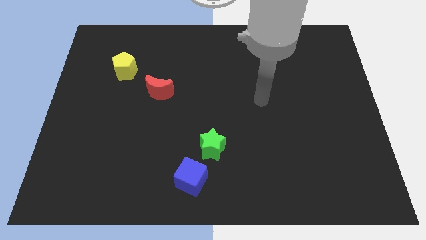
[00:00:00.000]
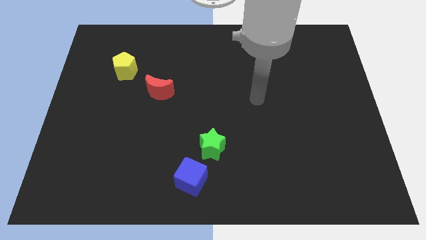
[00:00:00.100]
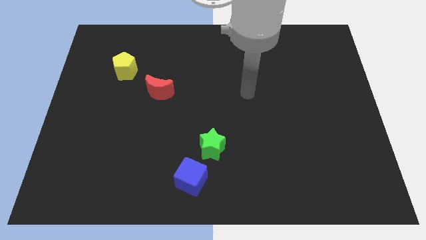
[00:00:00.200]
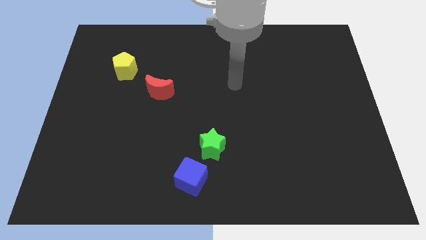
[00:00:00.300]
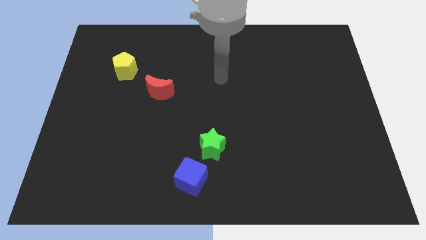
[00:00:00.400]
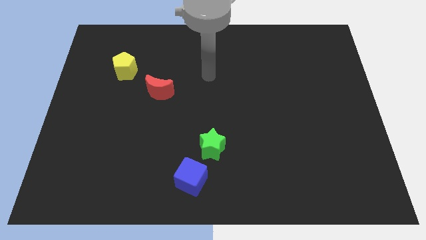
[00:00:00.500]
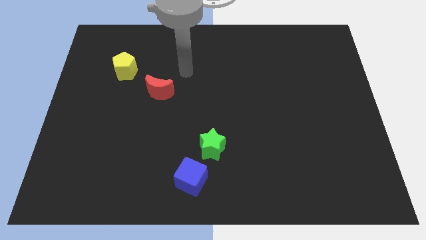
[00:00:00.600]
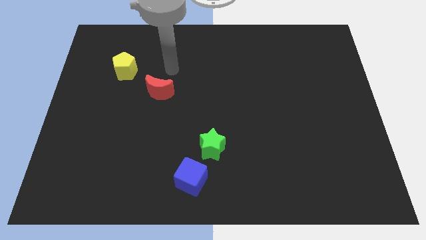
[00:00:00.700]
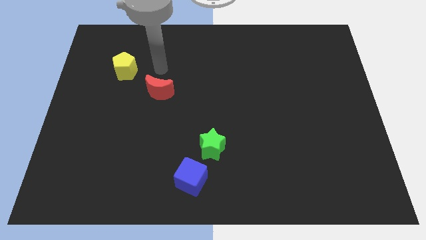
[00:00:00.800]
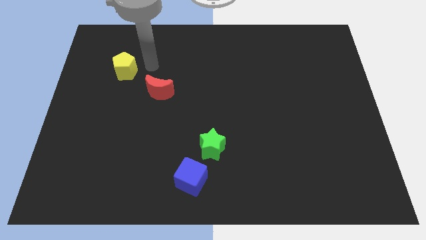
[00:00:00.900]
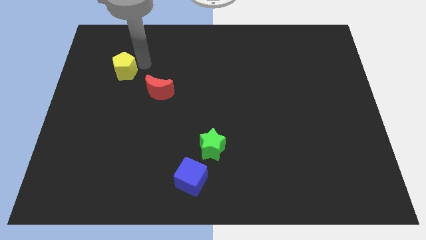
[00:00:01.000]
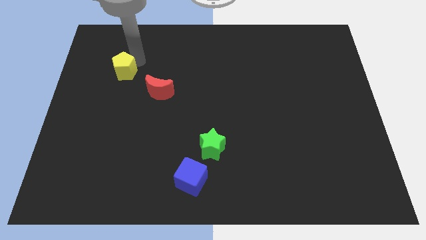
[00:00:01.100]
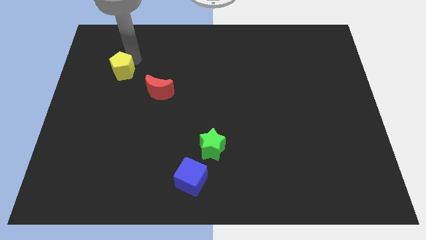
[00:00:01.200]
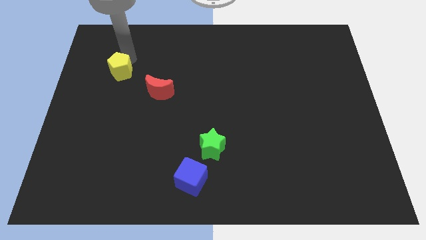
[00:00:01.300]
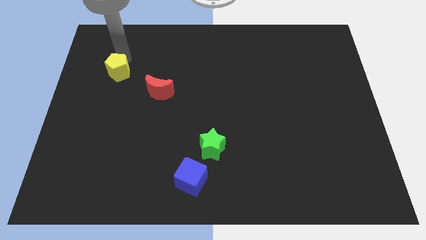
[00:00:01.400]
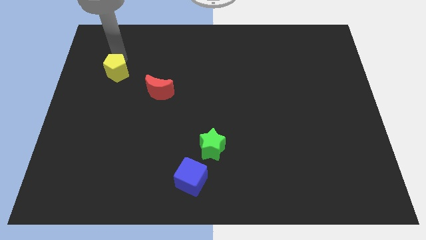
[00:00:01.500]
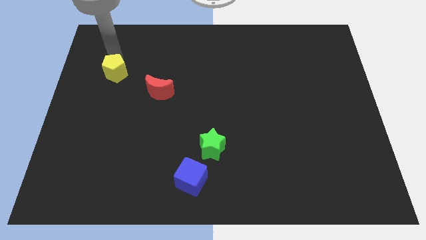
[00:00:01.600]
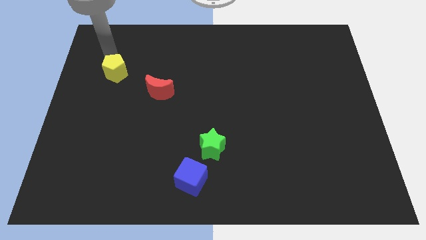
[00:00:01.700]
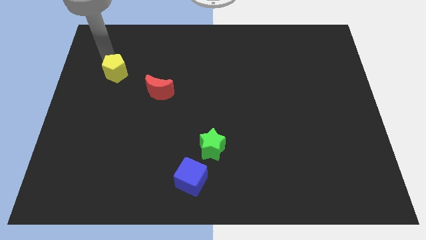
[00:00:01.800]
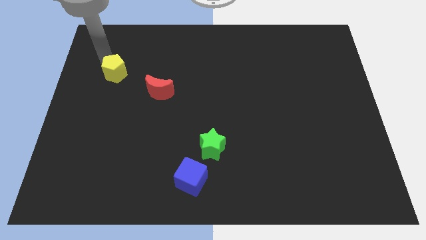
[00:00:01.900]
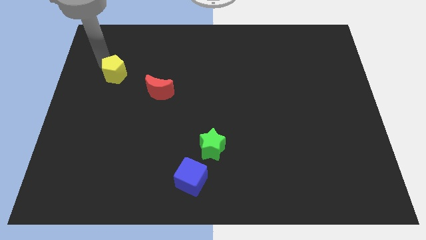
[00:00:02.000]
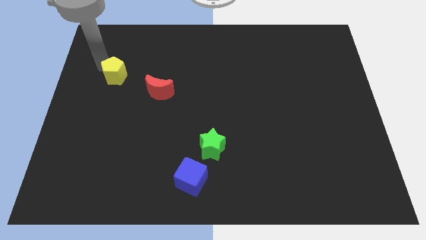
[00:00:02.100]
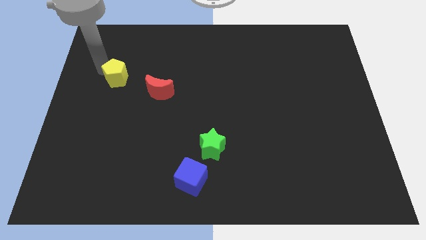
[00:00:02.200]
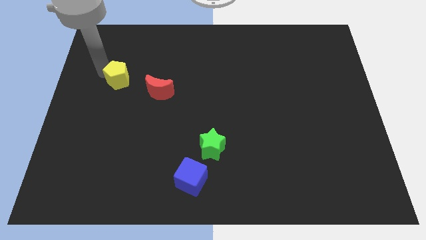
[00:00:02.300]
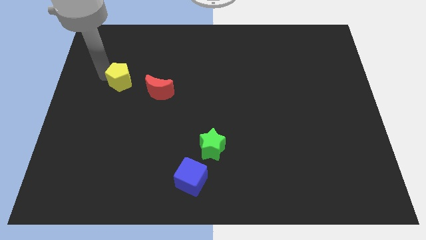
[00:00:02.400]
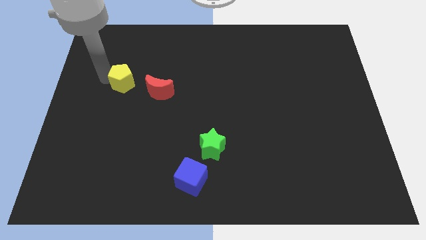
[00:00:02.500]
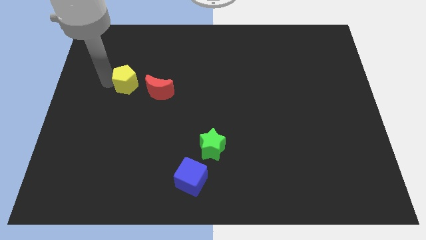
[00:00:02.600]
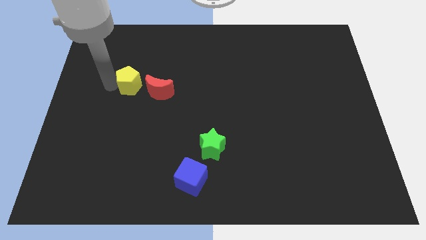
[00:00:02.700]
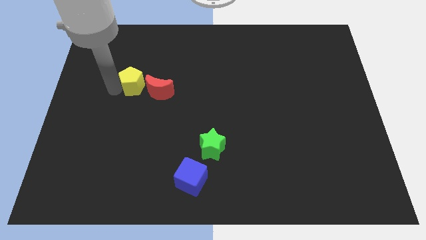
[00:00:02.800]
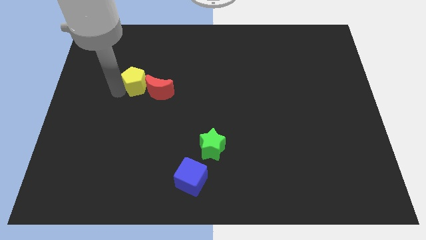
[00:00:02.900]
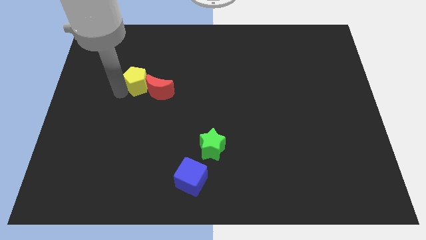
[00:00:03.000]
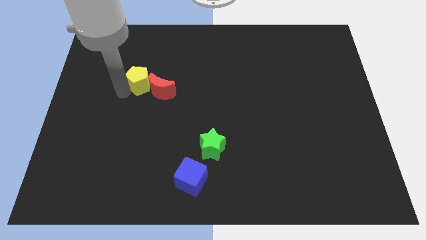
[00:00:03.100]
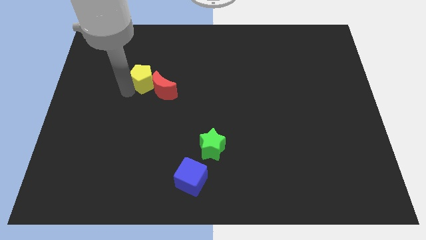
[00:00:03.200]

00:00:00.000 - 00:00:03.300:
move the pentagon close to the red moon

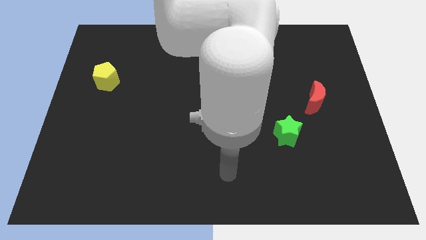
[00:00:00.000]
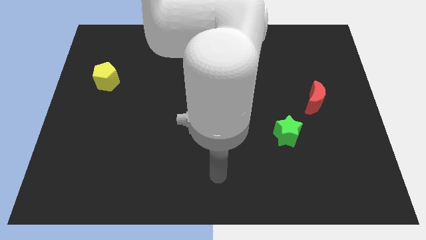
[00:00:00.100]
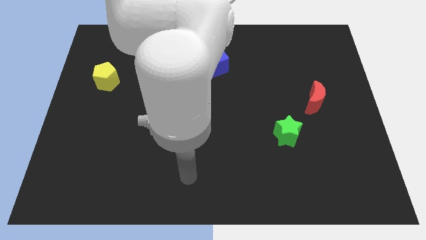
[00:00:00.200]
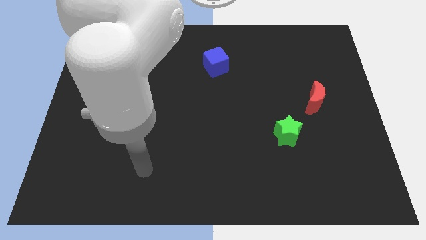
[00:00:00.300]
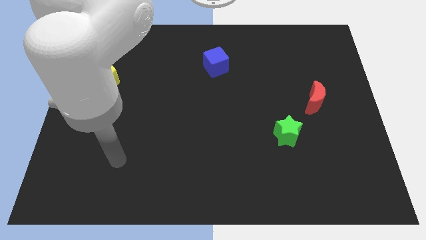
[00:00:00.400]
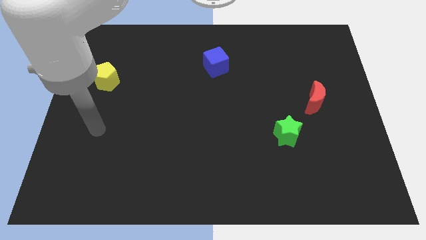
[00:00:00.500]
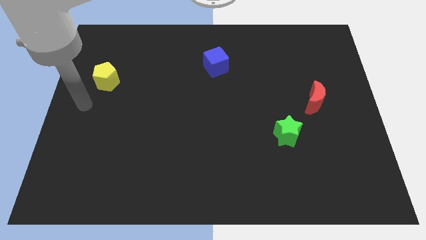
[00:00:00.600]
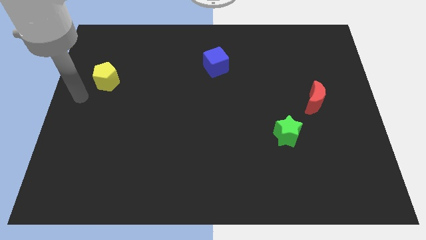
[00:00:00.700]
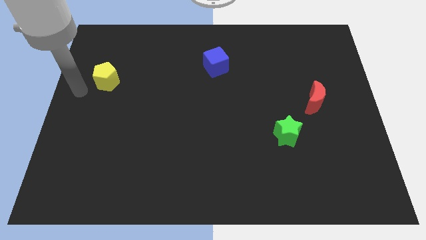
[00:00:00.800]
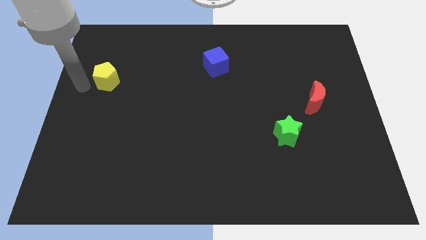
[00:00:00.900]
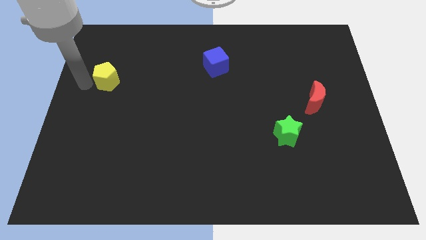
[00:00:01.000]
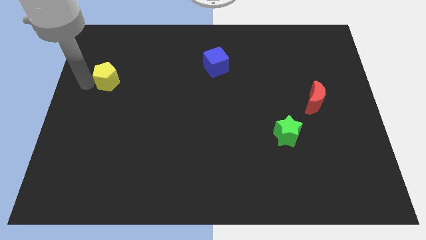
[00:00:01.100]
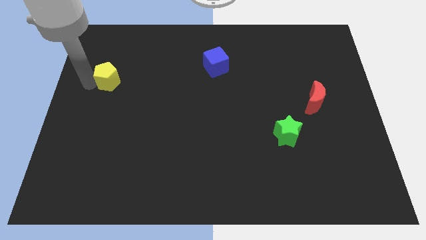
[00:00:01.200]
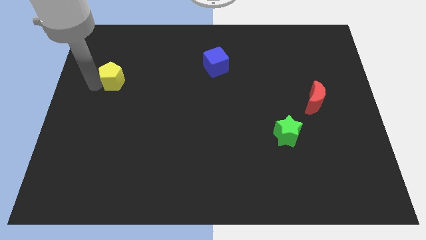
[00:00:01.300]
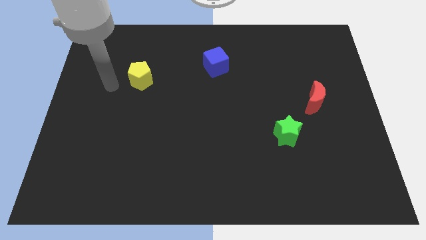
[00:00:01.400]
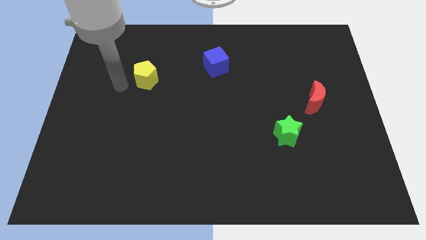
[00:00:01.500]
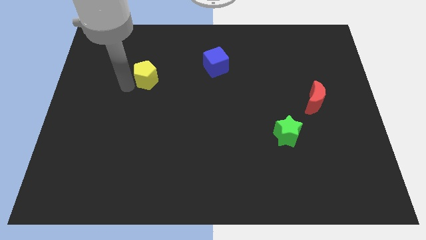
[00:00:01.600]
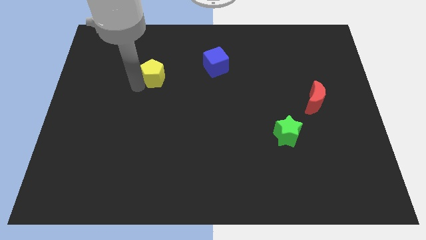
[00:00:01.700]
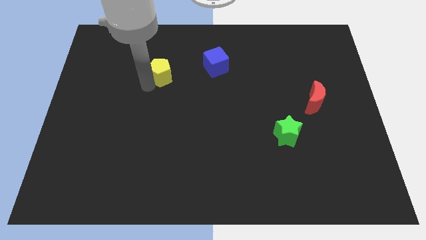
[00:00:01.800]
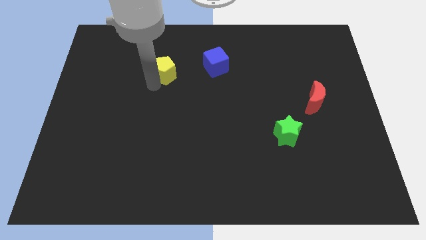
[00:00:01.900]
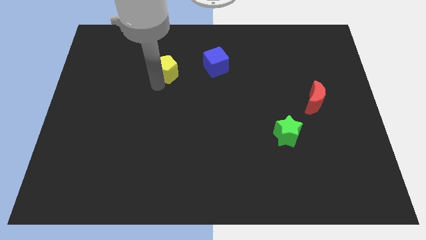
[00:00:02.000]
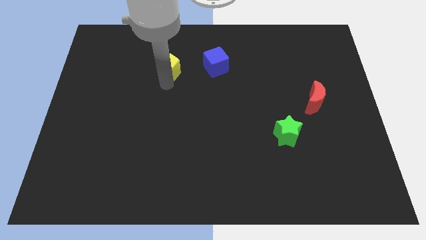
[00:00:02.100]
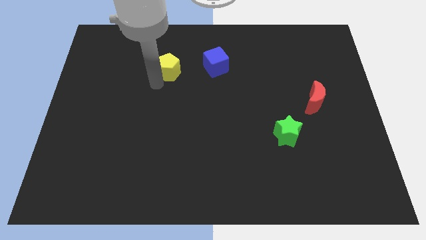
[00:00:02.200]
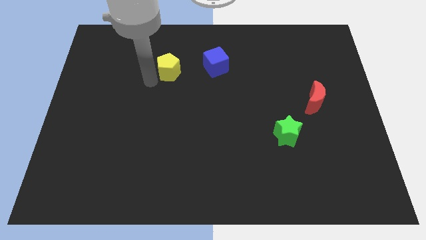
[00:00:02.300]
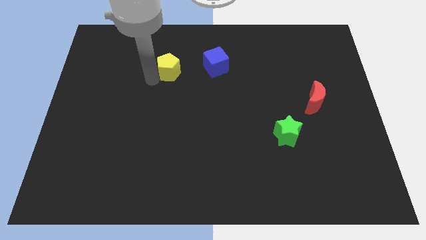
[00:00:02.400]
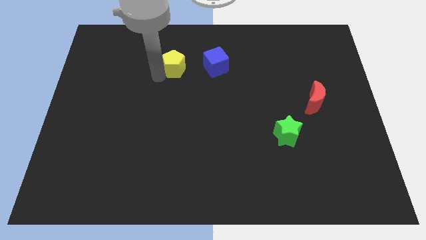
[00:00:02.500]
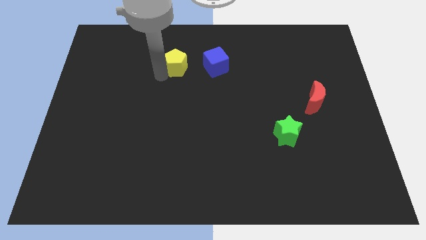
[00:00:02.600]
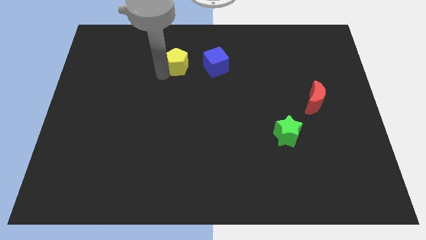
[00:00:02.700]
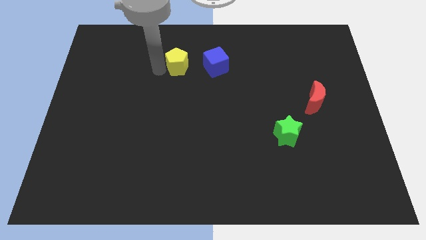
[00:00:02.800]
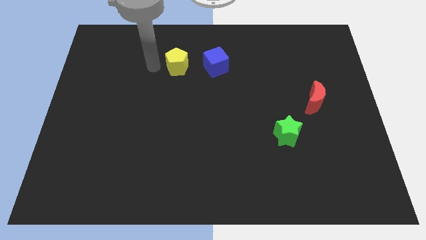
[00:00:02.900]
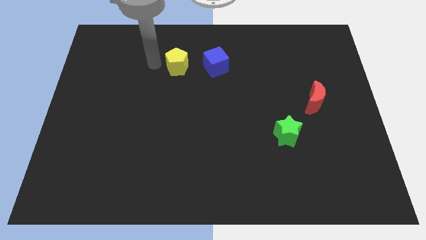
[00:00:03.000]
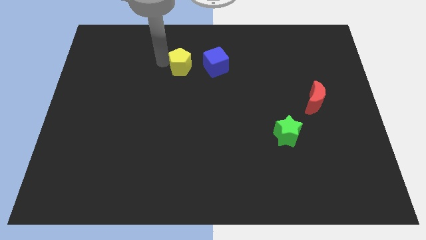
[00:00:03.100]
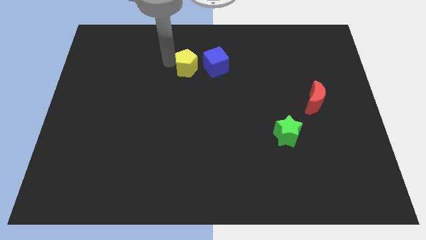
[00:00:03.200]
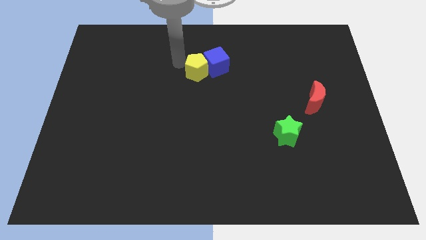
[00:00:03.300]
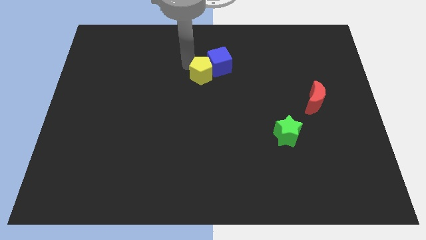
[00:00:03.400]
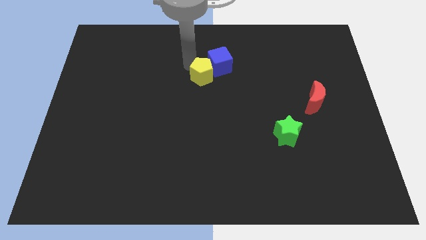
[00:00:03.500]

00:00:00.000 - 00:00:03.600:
slide the yellow pentagon to the blue cube

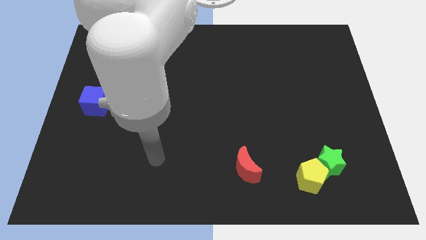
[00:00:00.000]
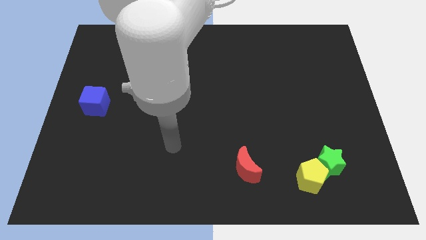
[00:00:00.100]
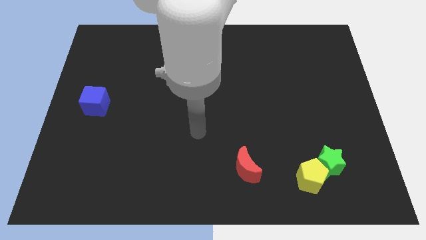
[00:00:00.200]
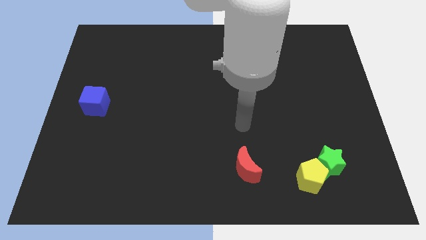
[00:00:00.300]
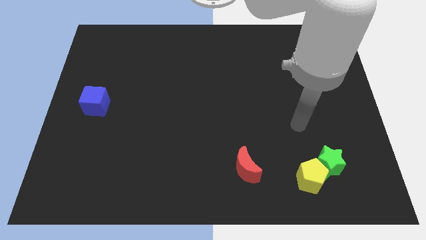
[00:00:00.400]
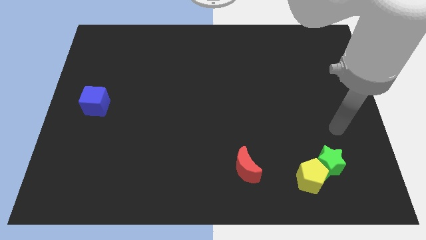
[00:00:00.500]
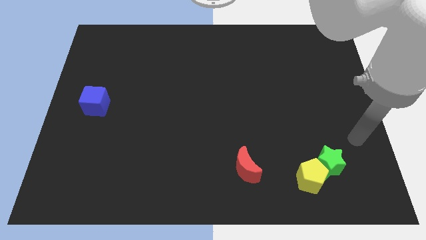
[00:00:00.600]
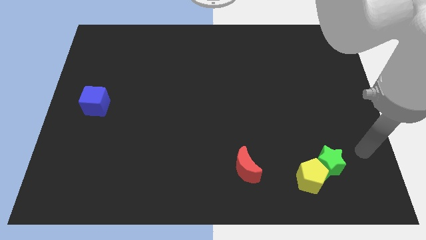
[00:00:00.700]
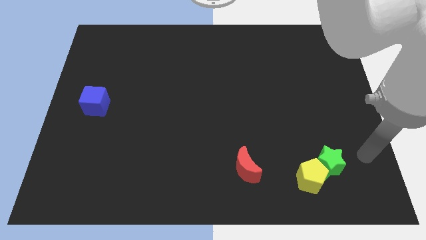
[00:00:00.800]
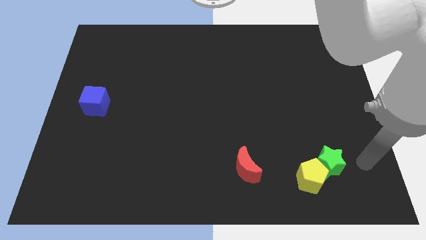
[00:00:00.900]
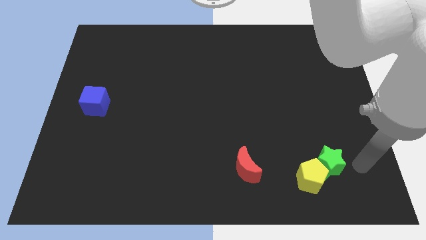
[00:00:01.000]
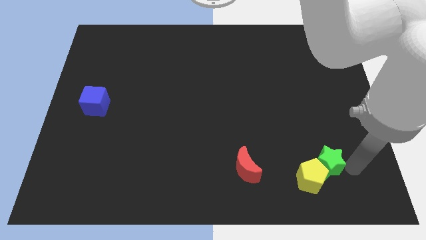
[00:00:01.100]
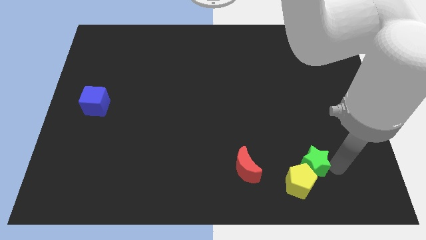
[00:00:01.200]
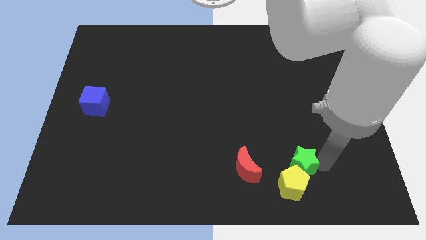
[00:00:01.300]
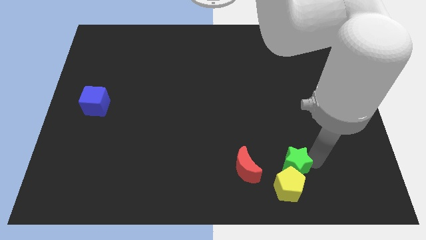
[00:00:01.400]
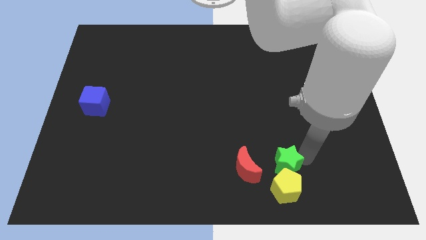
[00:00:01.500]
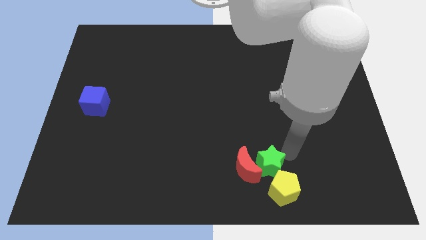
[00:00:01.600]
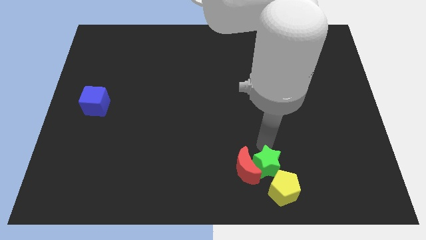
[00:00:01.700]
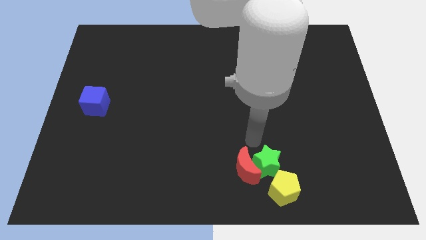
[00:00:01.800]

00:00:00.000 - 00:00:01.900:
move the green star close to the red moon
